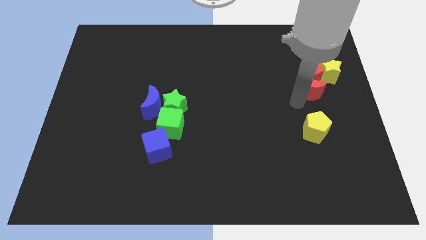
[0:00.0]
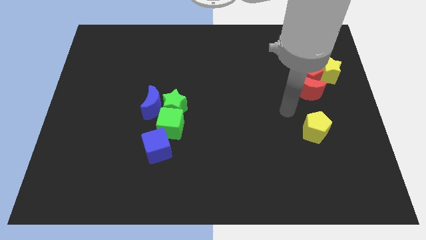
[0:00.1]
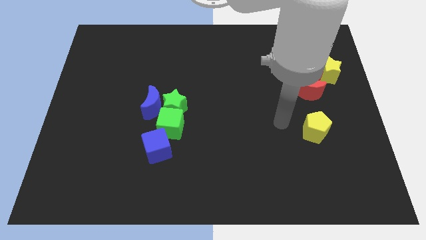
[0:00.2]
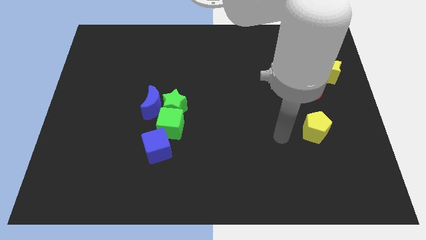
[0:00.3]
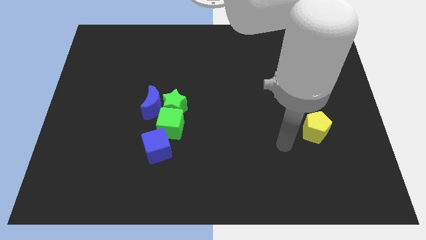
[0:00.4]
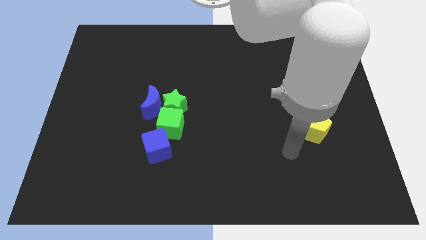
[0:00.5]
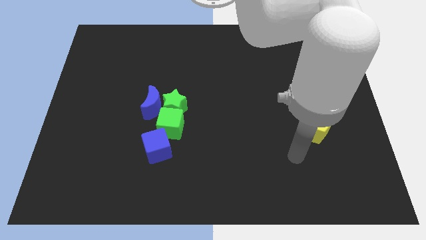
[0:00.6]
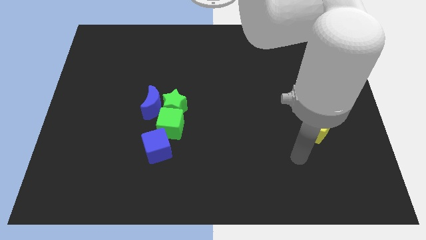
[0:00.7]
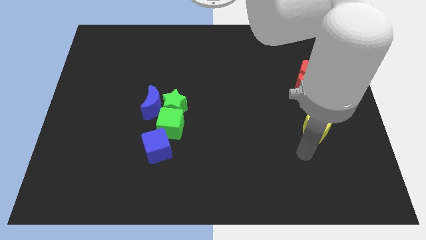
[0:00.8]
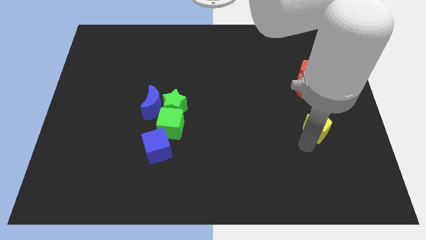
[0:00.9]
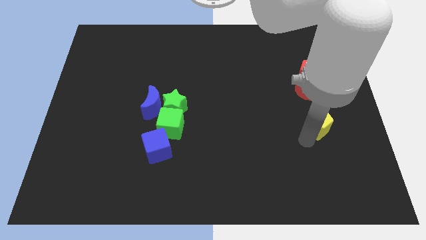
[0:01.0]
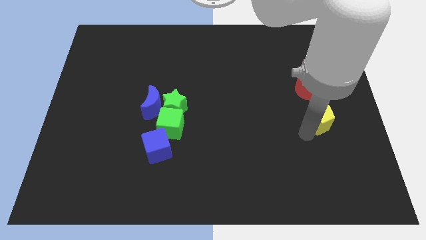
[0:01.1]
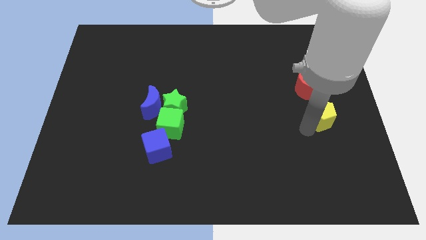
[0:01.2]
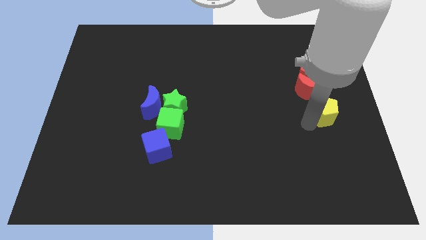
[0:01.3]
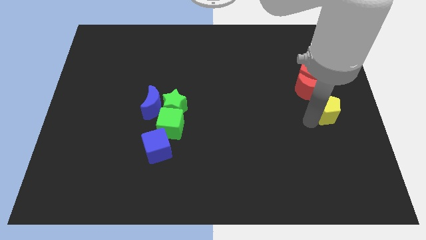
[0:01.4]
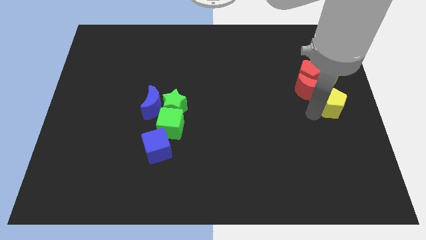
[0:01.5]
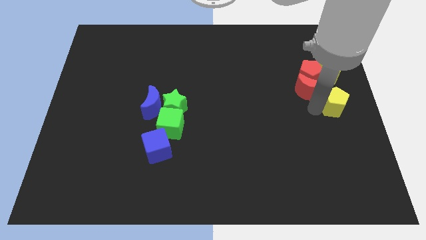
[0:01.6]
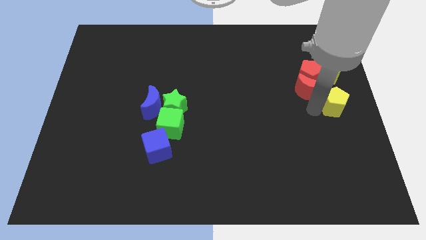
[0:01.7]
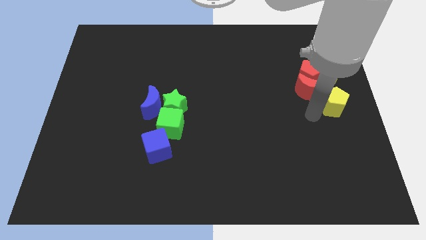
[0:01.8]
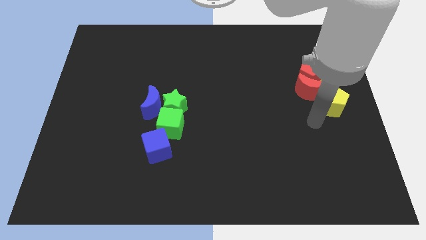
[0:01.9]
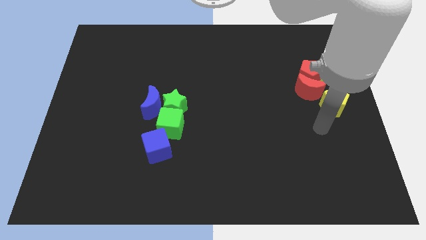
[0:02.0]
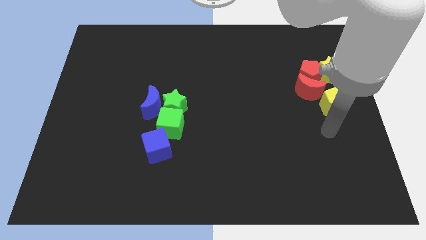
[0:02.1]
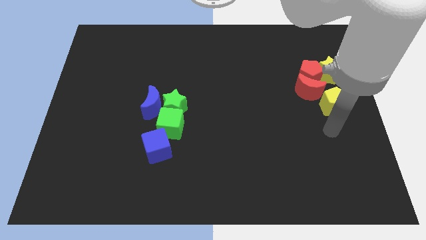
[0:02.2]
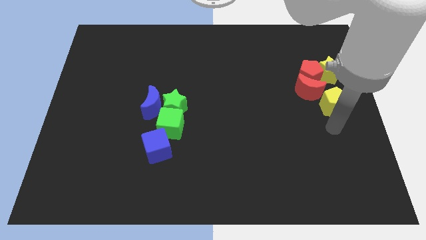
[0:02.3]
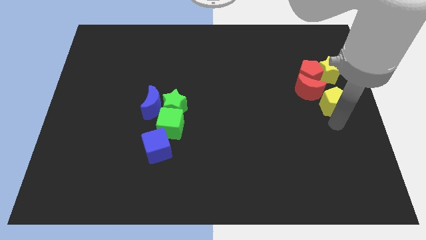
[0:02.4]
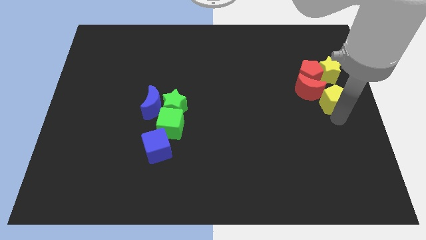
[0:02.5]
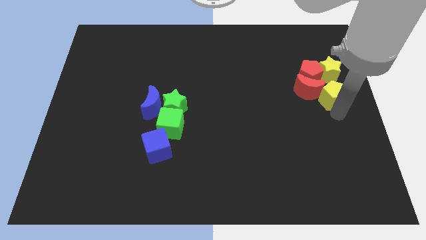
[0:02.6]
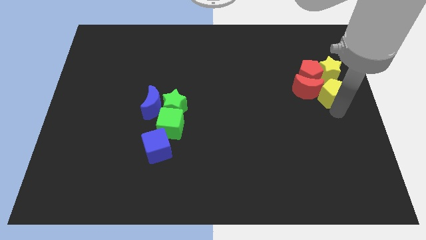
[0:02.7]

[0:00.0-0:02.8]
place the yellow pentagon to the right side of red crescent

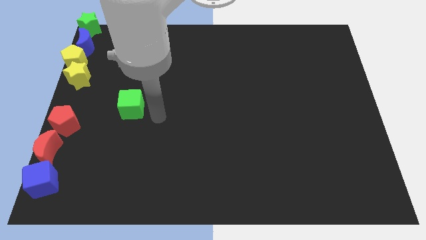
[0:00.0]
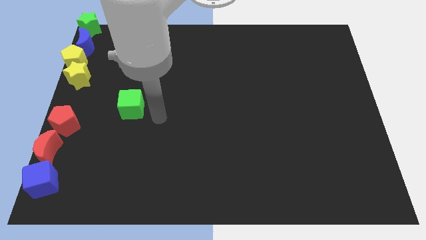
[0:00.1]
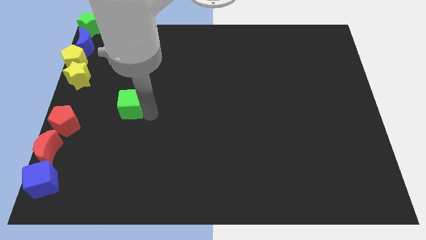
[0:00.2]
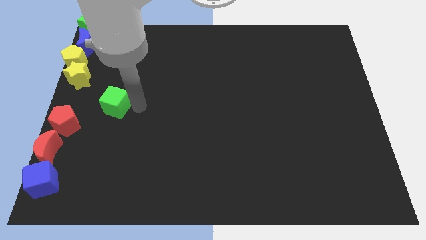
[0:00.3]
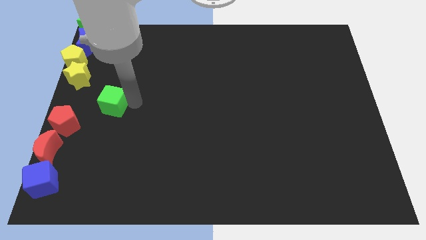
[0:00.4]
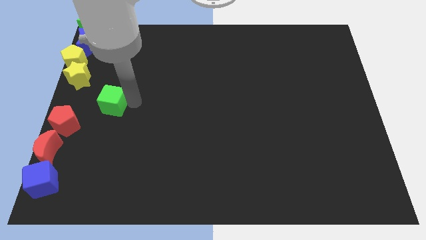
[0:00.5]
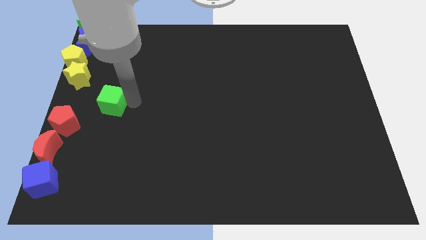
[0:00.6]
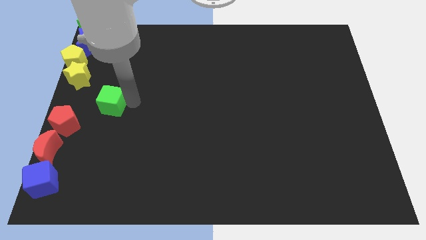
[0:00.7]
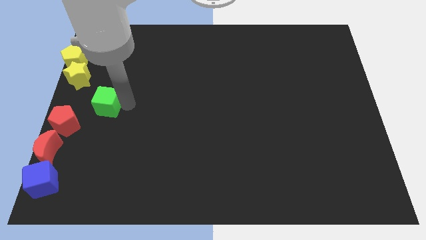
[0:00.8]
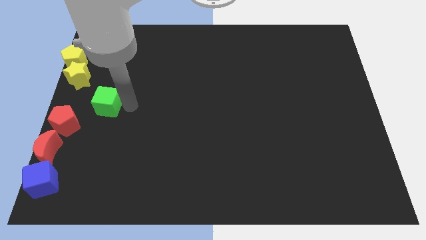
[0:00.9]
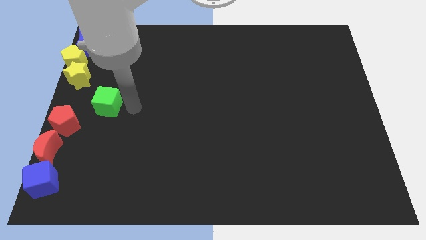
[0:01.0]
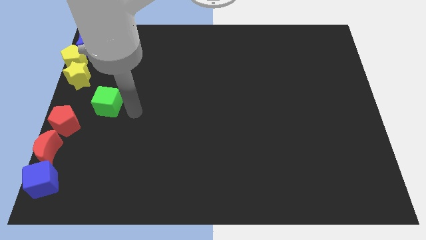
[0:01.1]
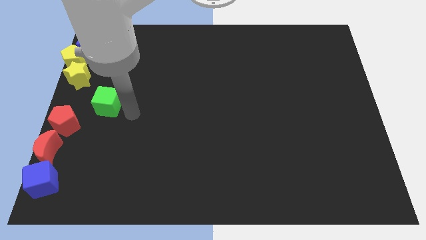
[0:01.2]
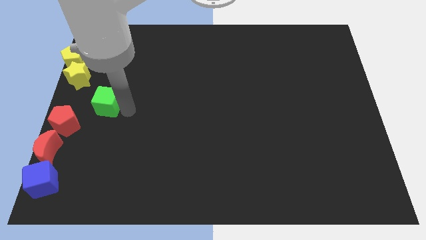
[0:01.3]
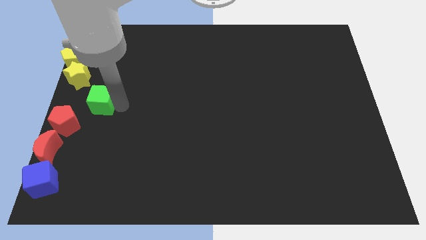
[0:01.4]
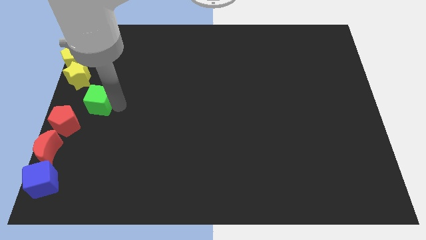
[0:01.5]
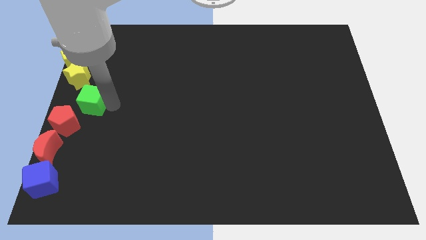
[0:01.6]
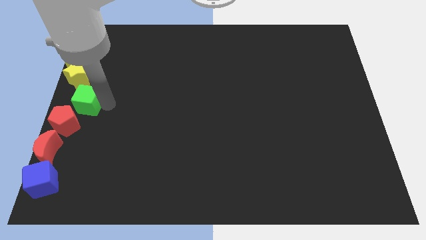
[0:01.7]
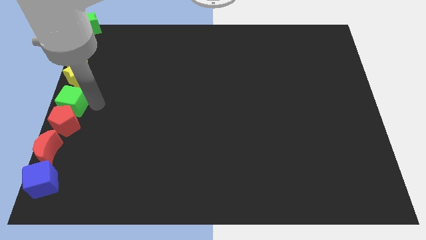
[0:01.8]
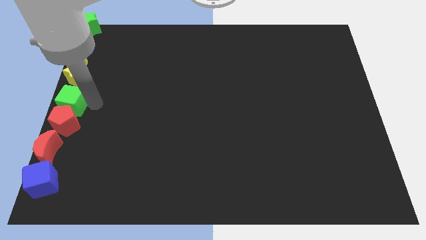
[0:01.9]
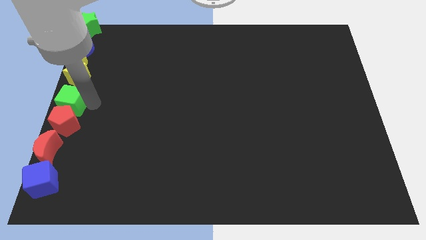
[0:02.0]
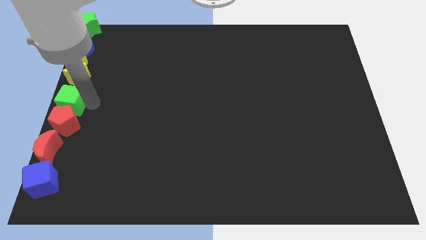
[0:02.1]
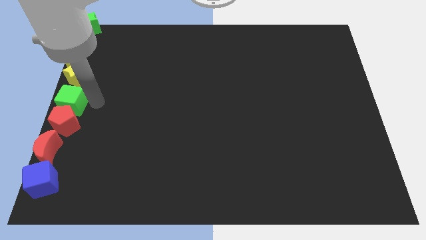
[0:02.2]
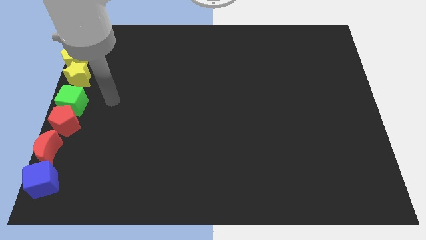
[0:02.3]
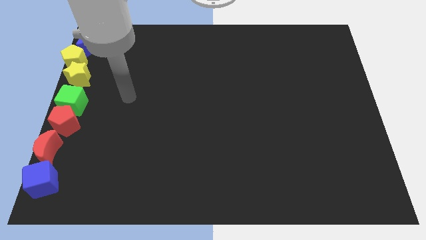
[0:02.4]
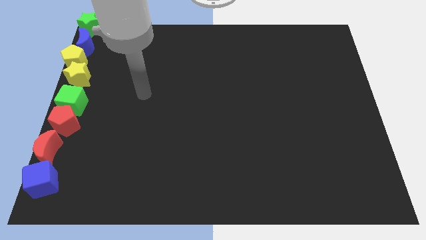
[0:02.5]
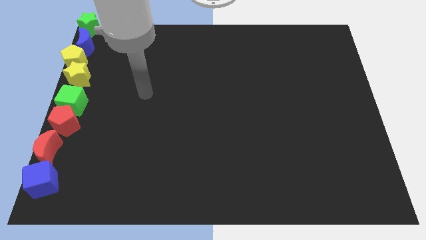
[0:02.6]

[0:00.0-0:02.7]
place green cube between yellow star and red pentagon

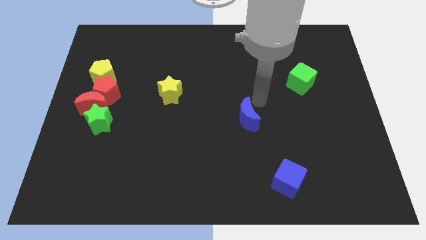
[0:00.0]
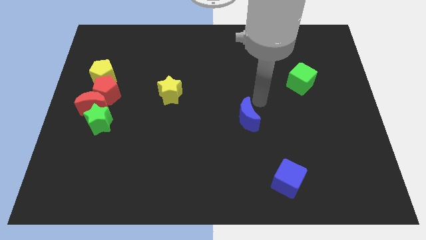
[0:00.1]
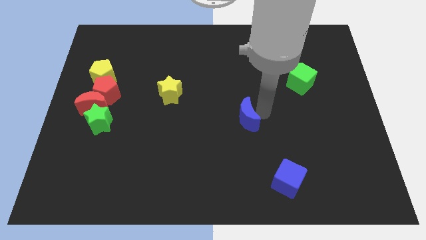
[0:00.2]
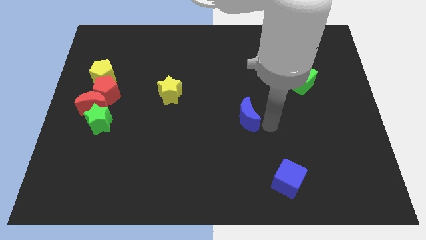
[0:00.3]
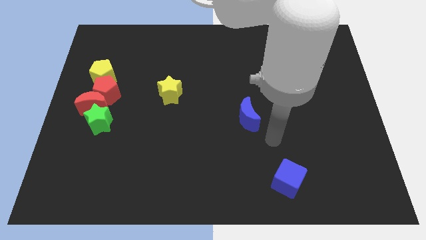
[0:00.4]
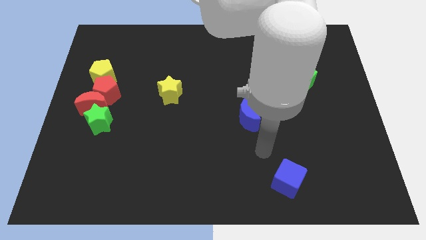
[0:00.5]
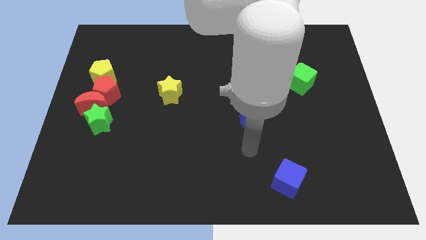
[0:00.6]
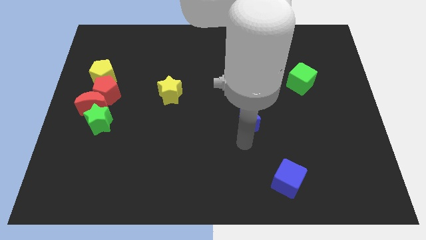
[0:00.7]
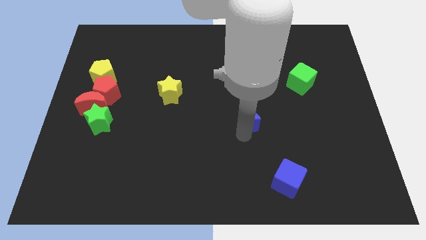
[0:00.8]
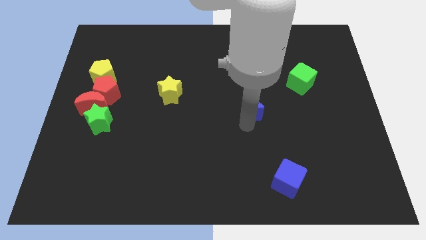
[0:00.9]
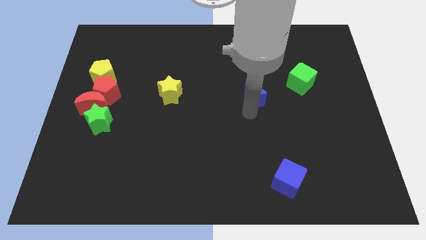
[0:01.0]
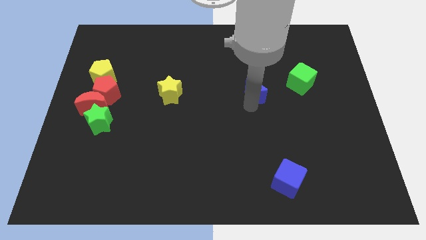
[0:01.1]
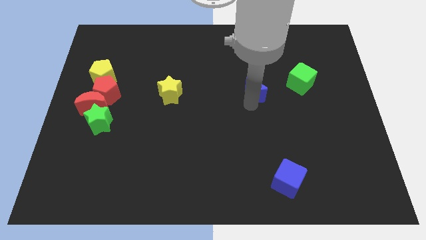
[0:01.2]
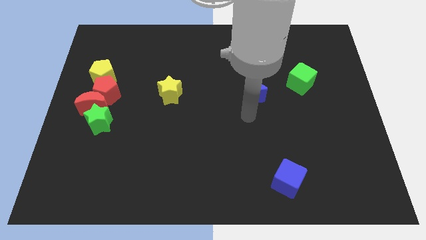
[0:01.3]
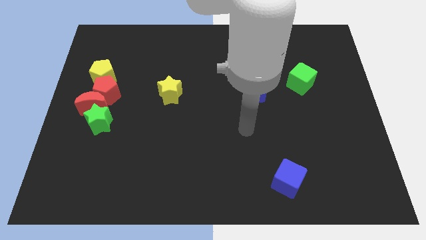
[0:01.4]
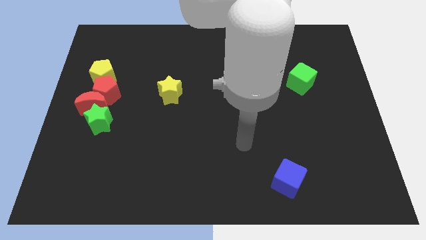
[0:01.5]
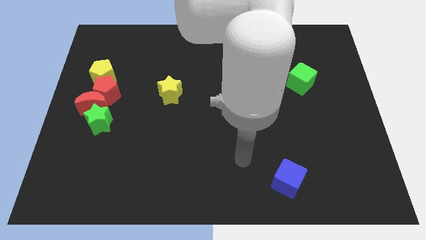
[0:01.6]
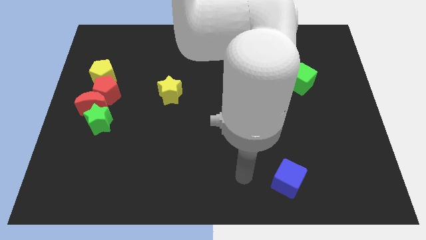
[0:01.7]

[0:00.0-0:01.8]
move blue crescent to the left of green cube

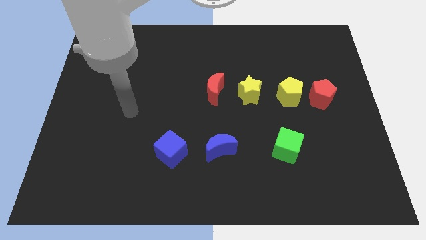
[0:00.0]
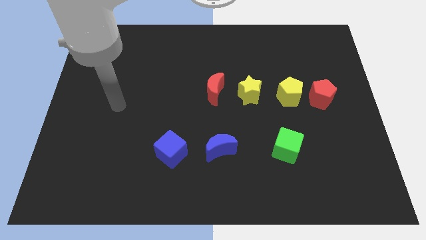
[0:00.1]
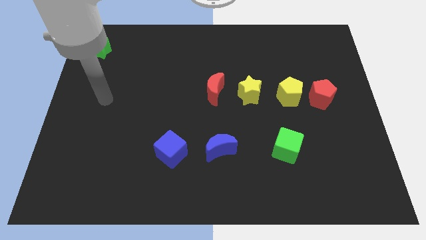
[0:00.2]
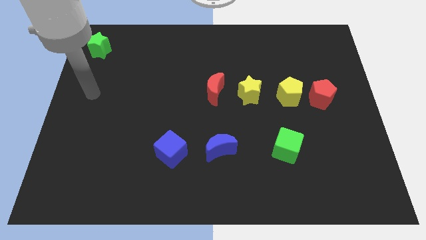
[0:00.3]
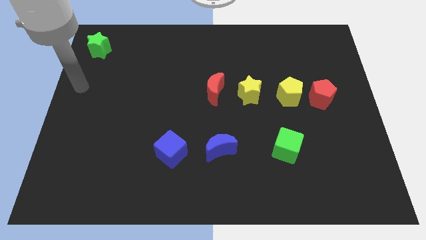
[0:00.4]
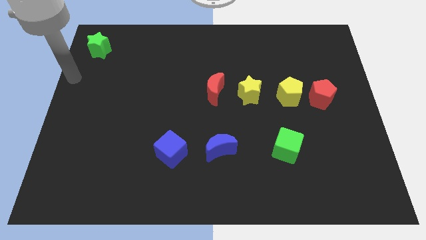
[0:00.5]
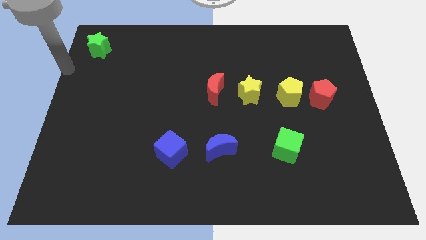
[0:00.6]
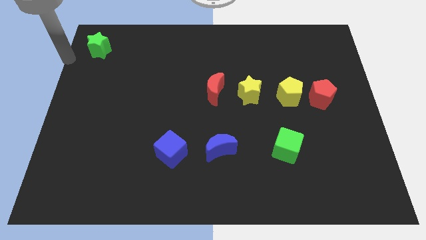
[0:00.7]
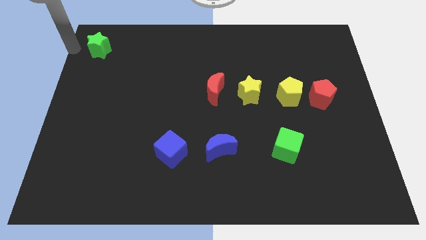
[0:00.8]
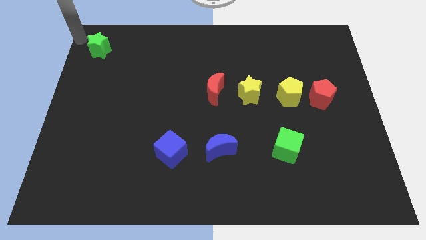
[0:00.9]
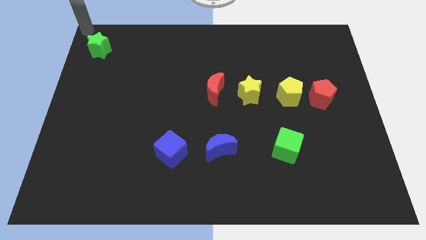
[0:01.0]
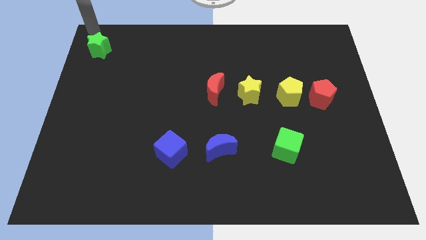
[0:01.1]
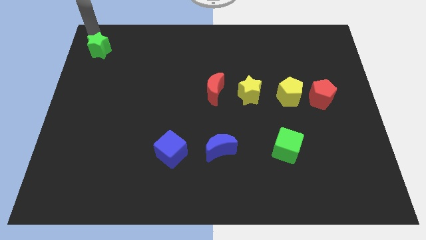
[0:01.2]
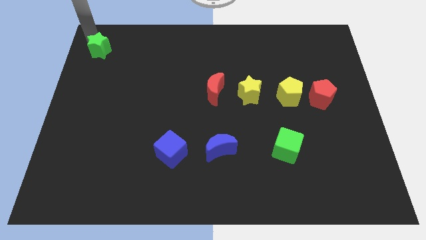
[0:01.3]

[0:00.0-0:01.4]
place the arm on the top left of the green star

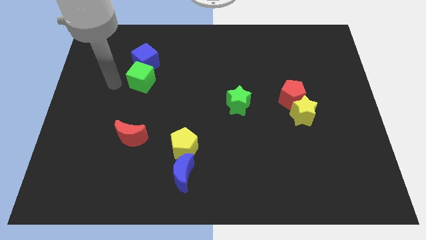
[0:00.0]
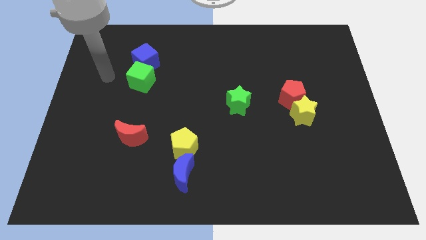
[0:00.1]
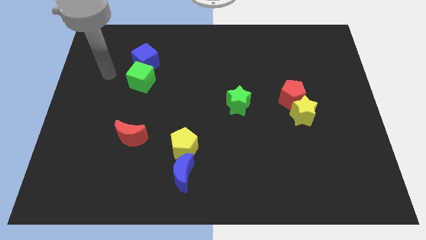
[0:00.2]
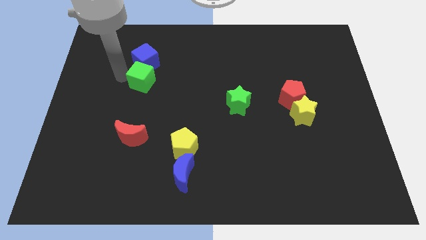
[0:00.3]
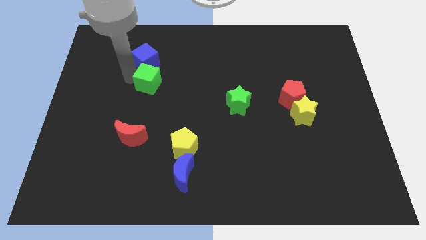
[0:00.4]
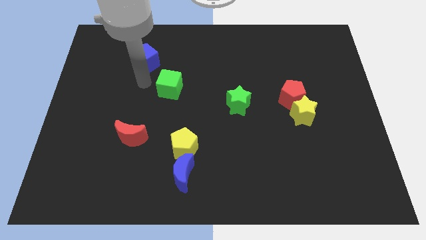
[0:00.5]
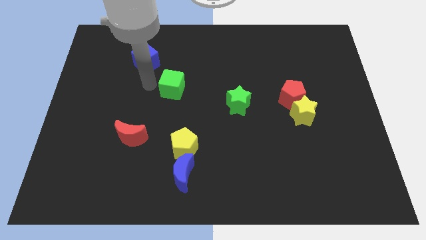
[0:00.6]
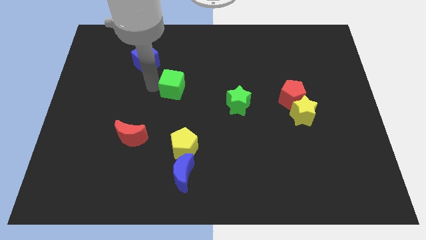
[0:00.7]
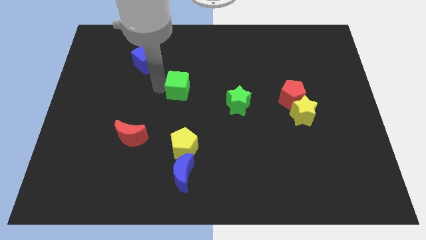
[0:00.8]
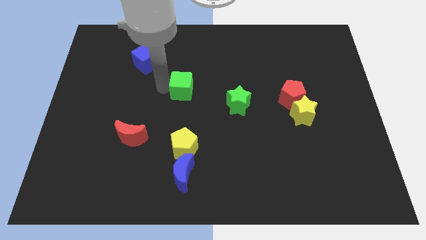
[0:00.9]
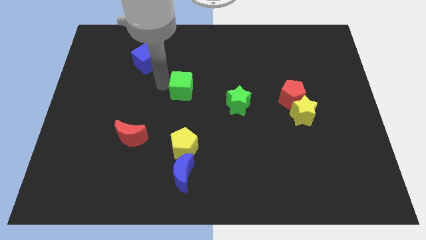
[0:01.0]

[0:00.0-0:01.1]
separate green cube from blue cube
